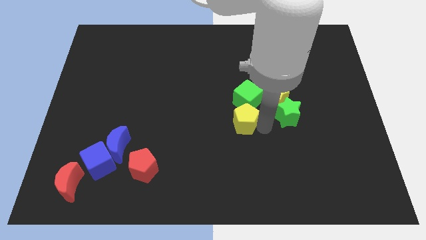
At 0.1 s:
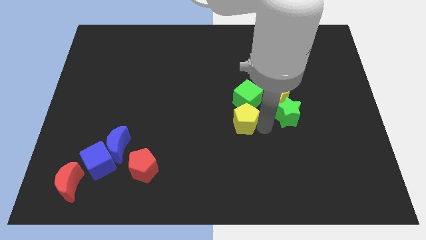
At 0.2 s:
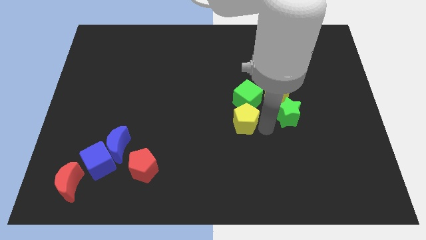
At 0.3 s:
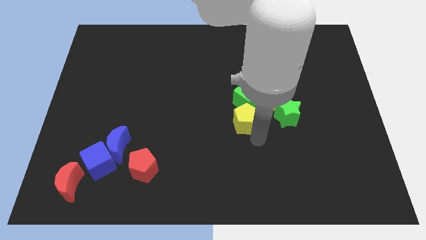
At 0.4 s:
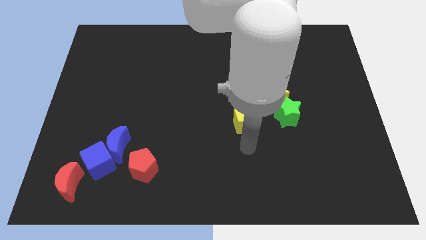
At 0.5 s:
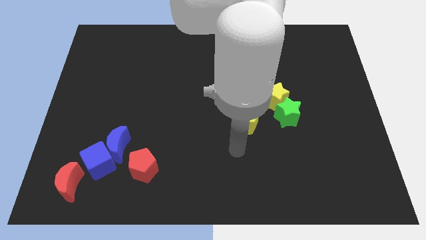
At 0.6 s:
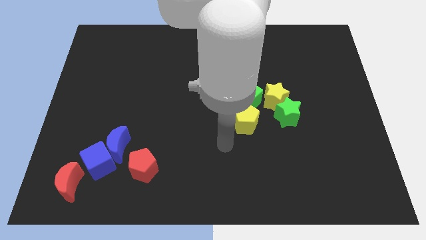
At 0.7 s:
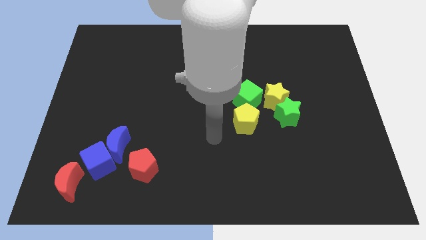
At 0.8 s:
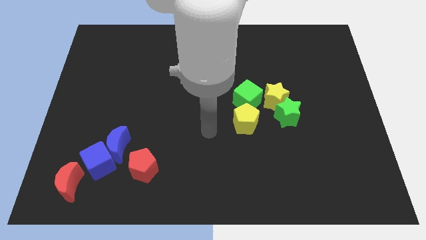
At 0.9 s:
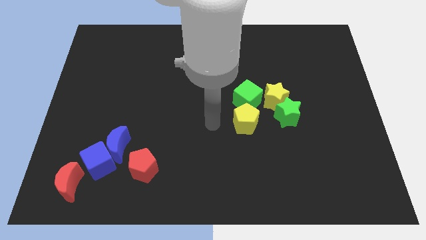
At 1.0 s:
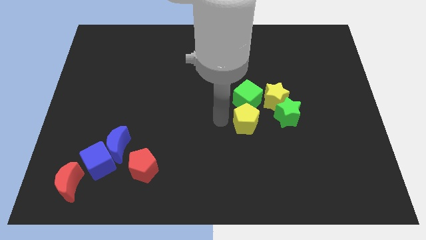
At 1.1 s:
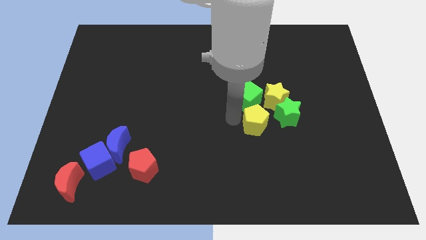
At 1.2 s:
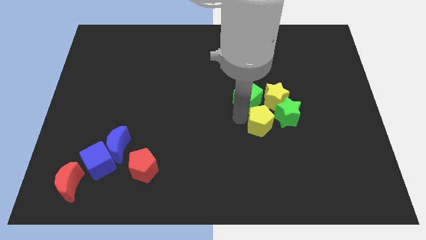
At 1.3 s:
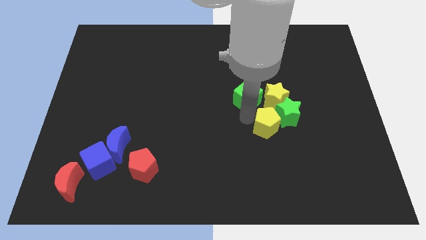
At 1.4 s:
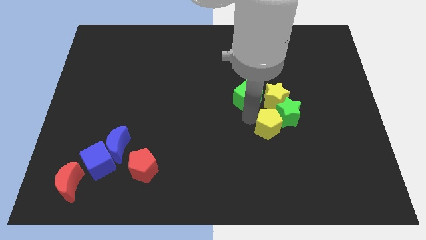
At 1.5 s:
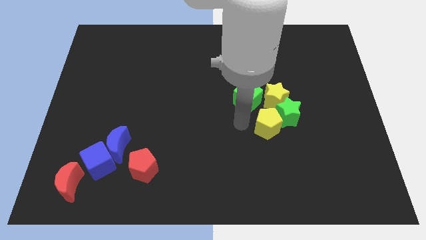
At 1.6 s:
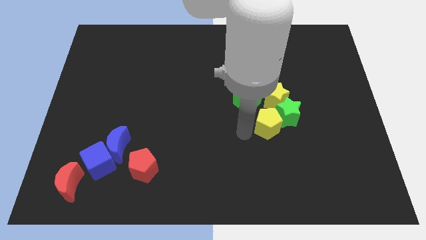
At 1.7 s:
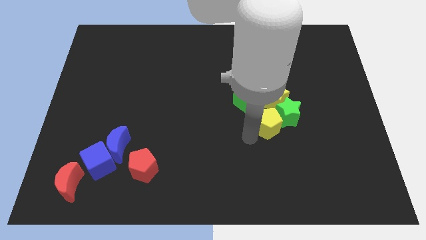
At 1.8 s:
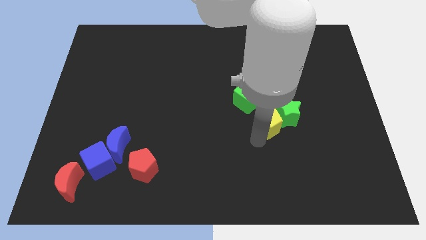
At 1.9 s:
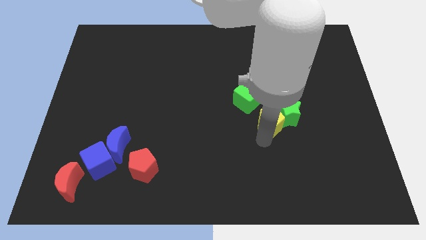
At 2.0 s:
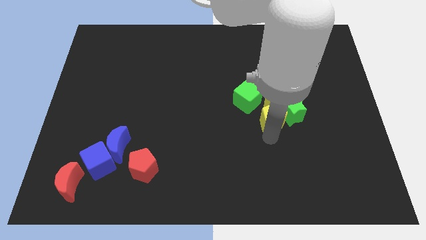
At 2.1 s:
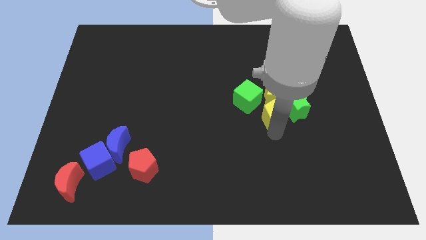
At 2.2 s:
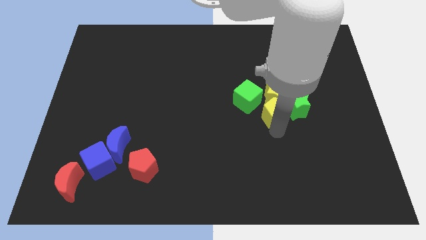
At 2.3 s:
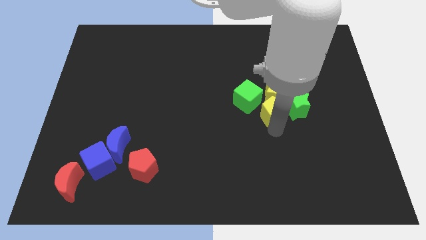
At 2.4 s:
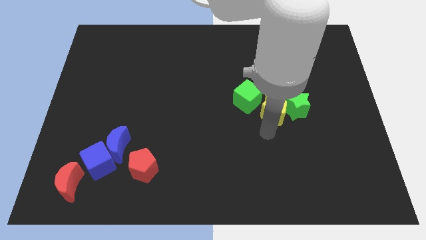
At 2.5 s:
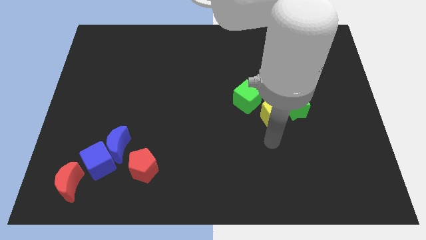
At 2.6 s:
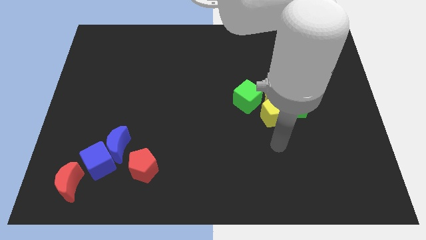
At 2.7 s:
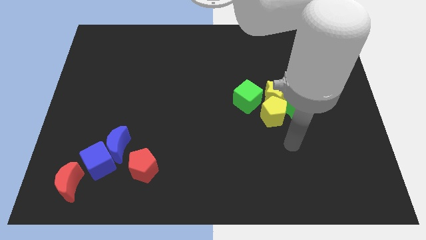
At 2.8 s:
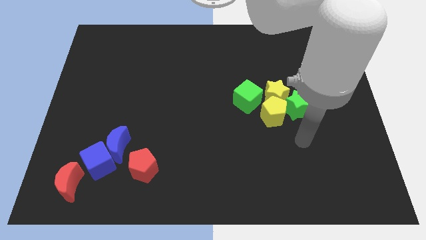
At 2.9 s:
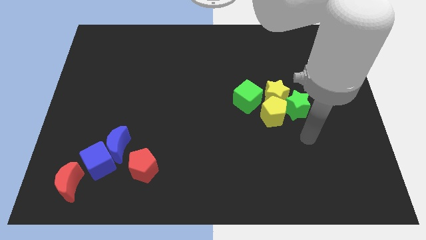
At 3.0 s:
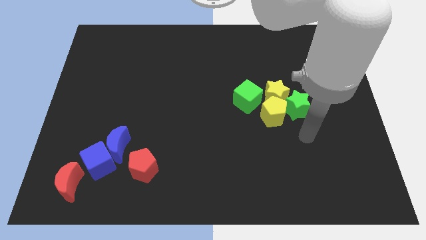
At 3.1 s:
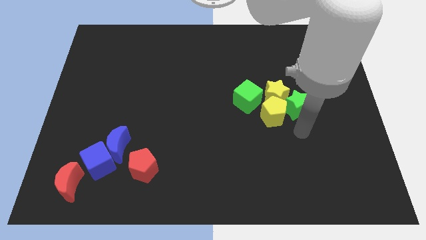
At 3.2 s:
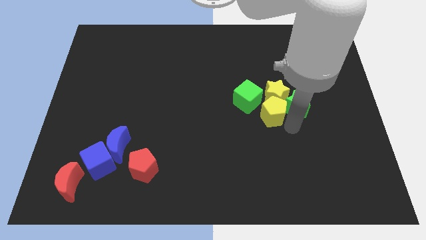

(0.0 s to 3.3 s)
push the yellow pentagon into the bottom of the yellow star

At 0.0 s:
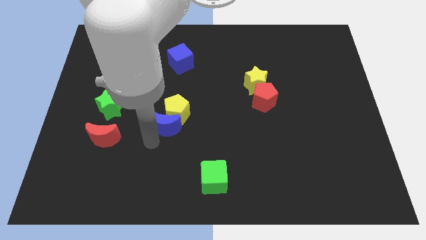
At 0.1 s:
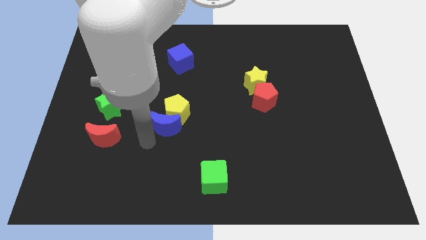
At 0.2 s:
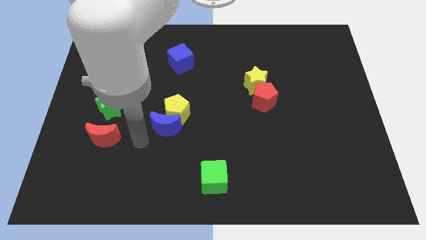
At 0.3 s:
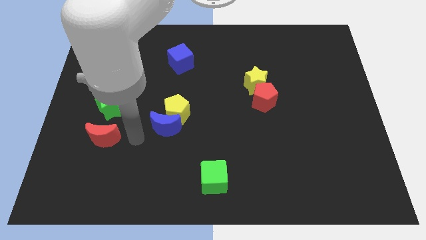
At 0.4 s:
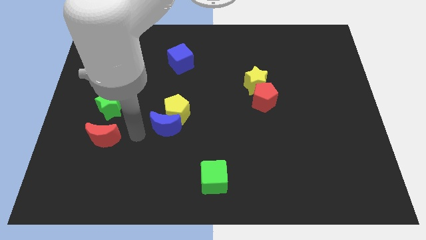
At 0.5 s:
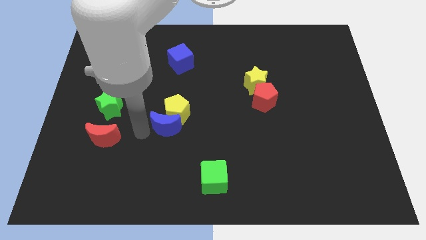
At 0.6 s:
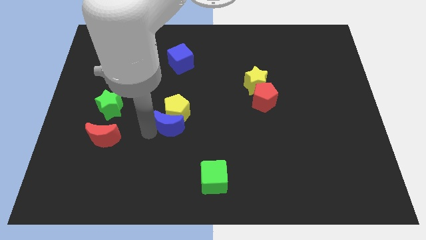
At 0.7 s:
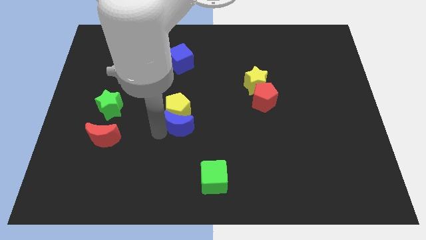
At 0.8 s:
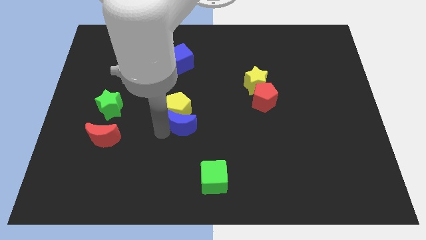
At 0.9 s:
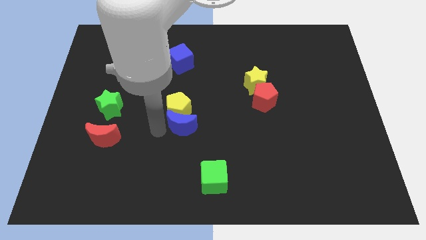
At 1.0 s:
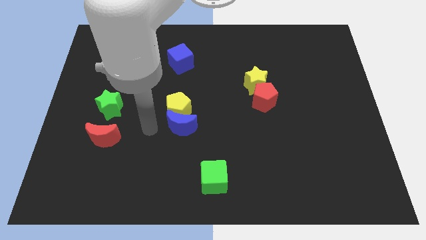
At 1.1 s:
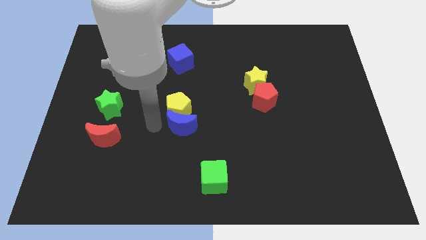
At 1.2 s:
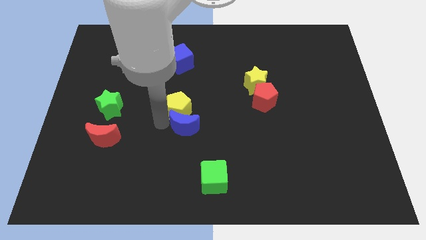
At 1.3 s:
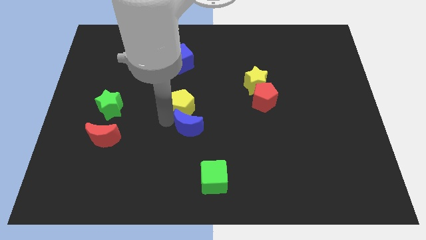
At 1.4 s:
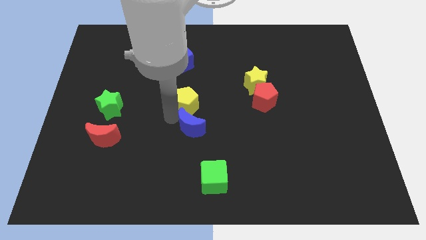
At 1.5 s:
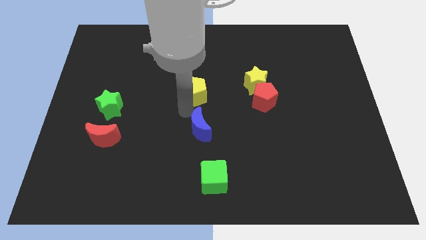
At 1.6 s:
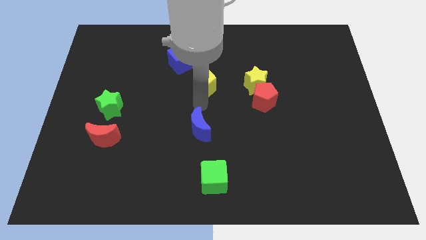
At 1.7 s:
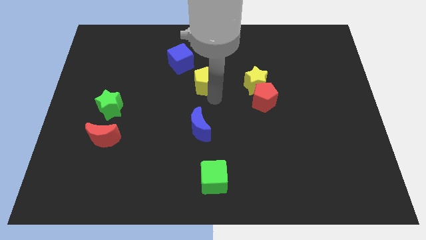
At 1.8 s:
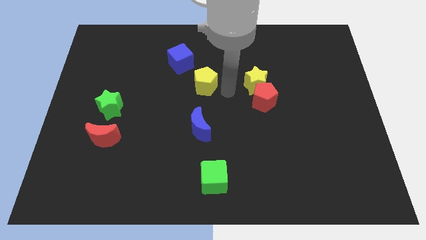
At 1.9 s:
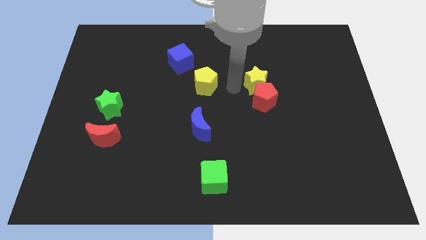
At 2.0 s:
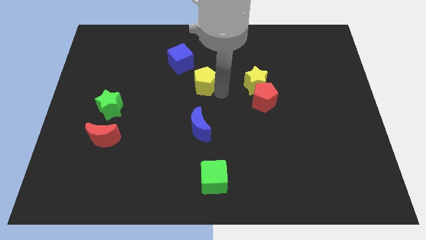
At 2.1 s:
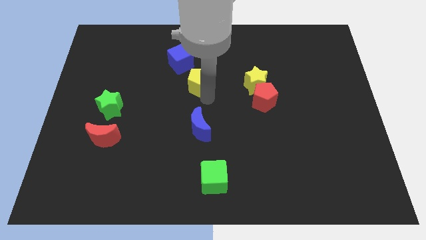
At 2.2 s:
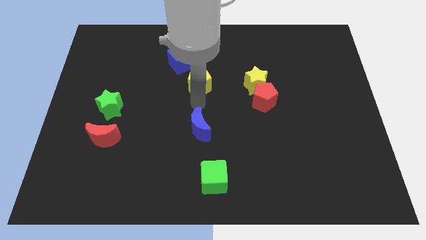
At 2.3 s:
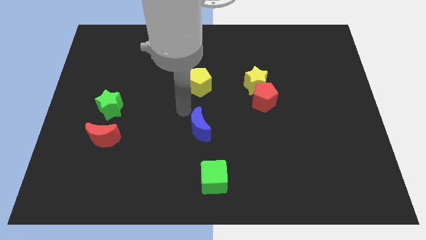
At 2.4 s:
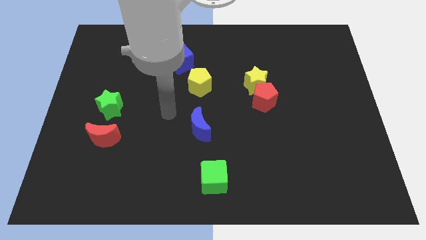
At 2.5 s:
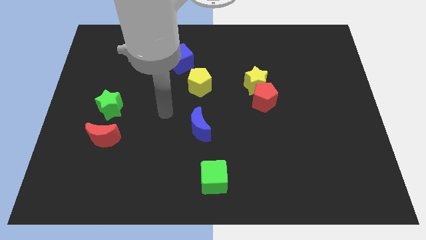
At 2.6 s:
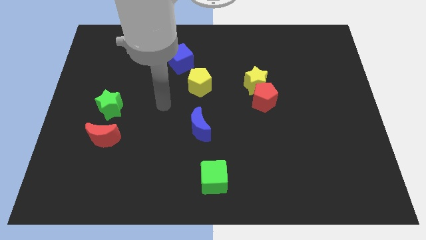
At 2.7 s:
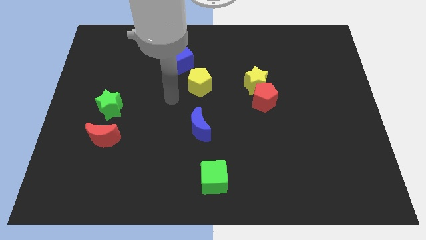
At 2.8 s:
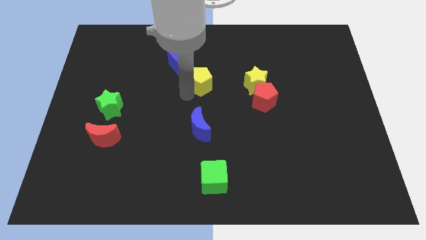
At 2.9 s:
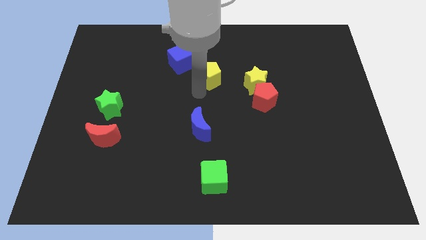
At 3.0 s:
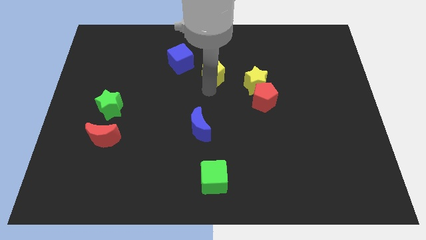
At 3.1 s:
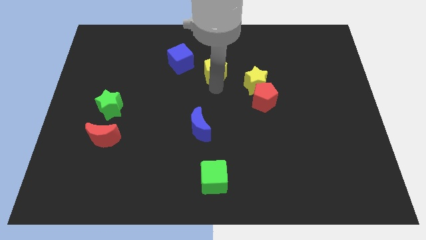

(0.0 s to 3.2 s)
slide the blue crescent and yellow pentagon above the green cube

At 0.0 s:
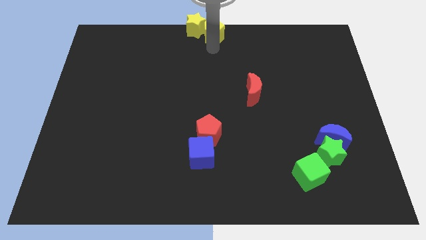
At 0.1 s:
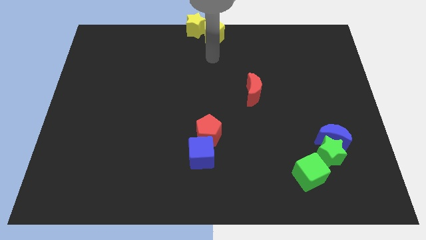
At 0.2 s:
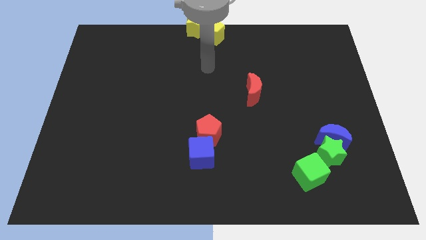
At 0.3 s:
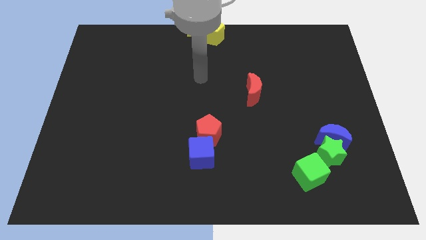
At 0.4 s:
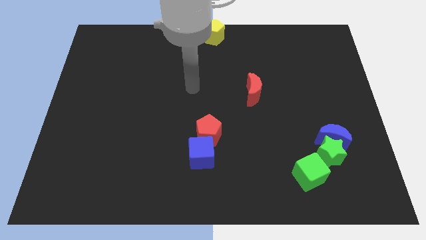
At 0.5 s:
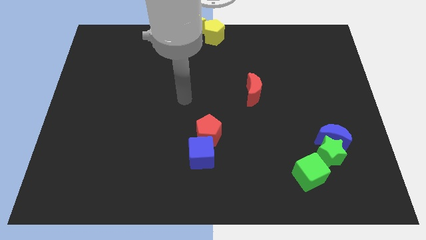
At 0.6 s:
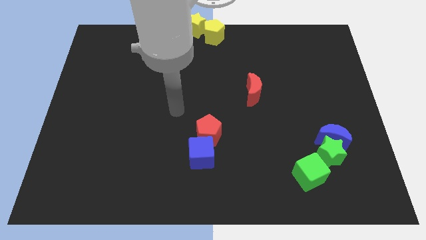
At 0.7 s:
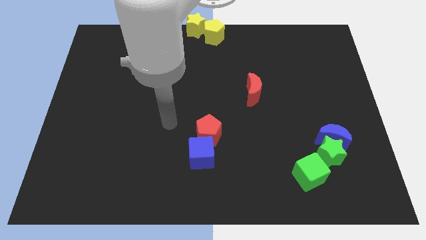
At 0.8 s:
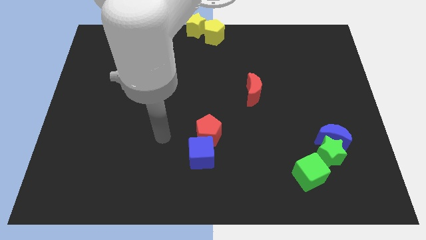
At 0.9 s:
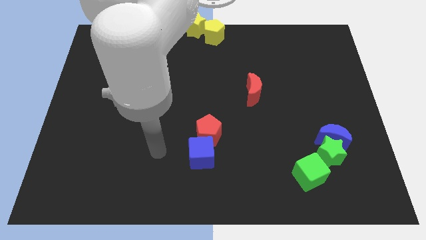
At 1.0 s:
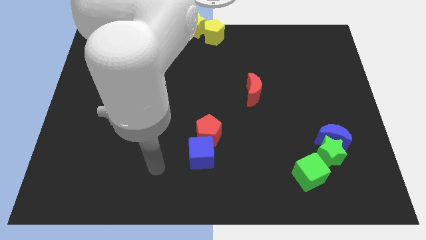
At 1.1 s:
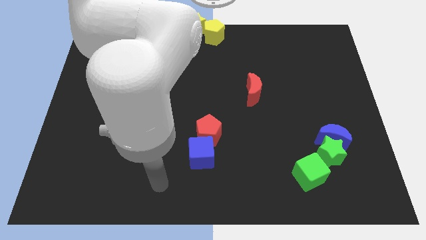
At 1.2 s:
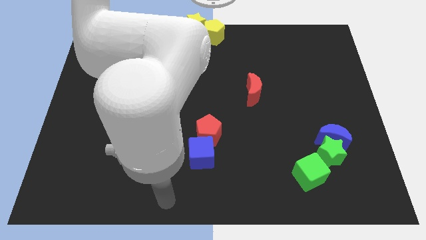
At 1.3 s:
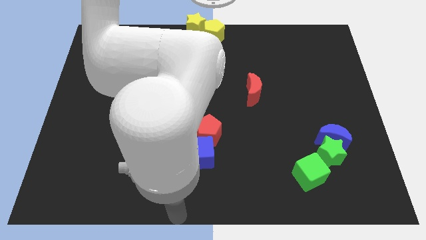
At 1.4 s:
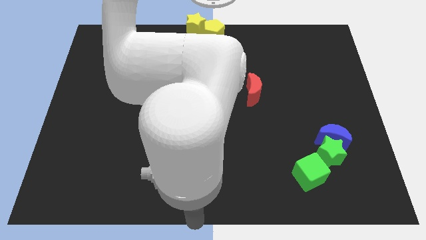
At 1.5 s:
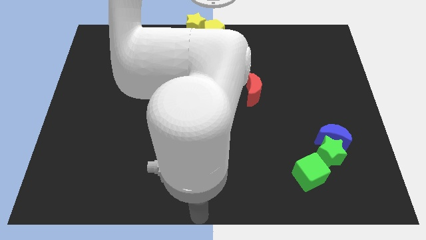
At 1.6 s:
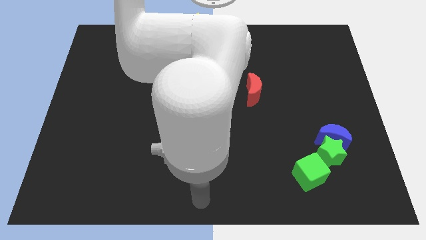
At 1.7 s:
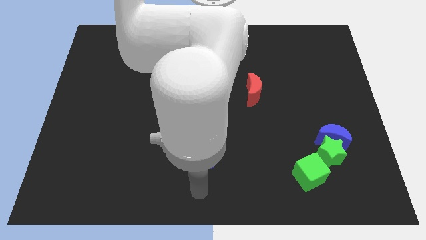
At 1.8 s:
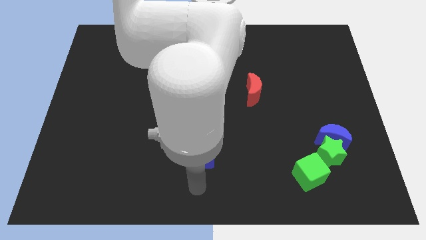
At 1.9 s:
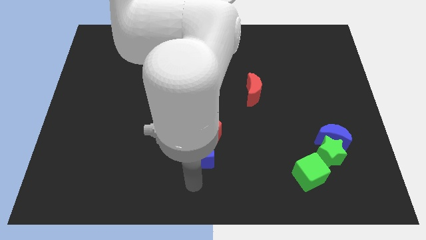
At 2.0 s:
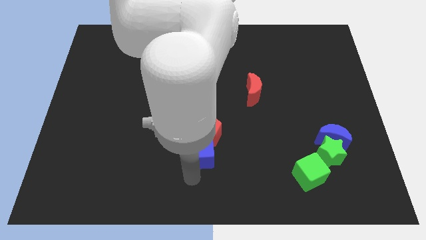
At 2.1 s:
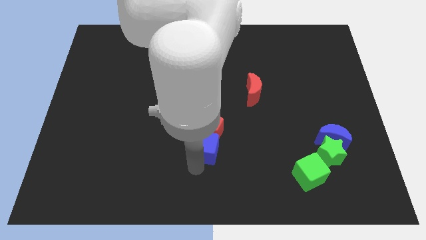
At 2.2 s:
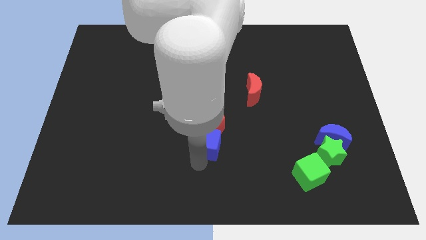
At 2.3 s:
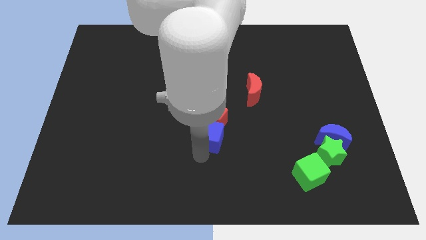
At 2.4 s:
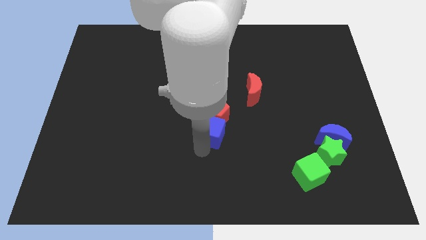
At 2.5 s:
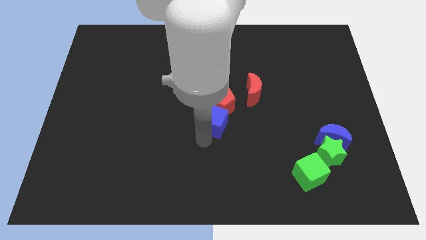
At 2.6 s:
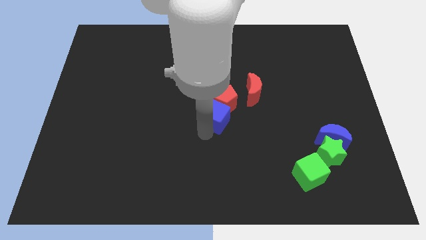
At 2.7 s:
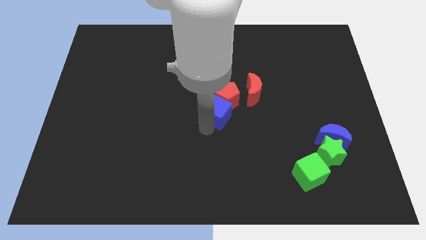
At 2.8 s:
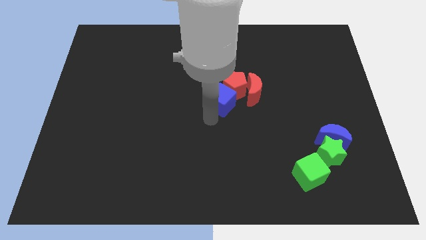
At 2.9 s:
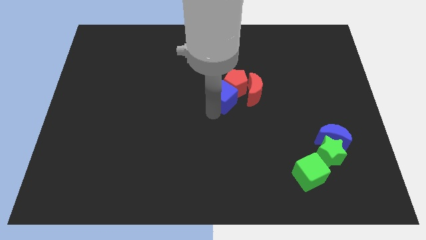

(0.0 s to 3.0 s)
push blue cube along with red pentagon close to red moon
